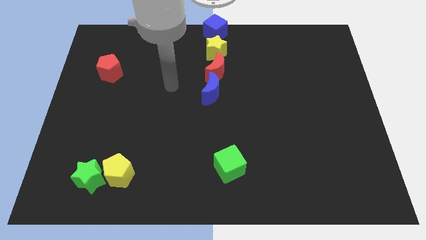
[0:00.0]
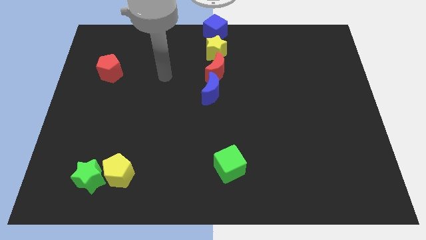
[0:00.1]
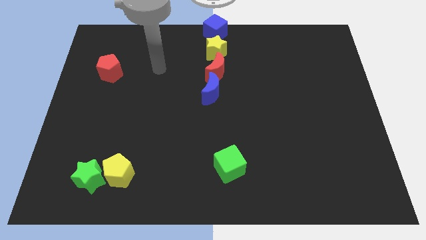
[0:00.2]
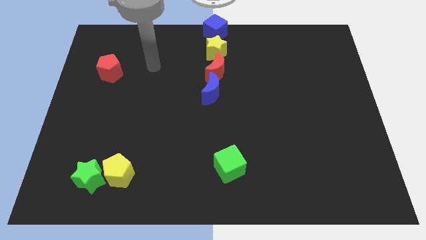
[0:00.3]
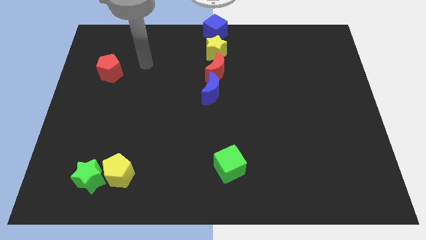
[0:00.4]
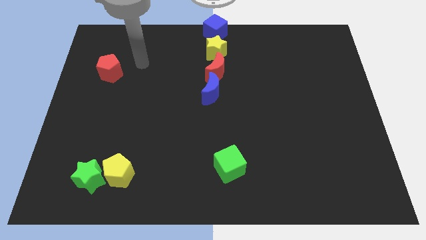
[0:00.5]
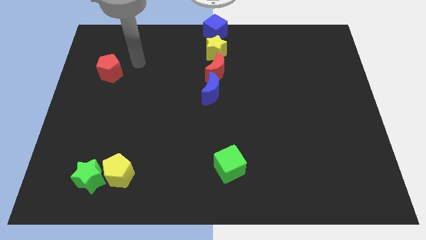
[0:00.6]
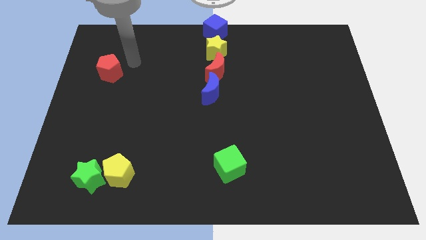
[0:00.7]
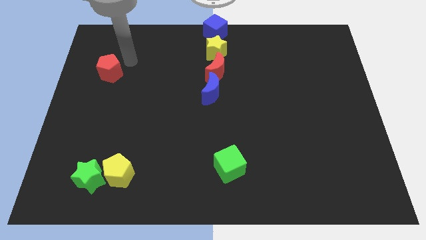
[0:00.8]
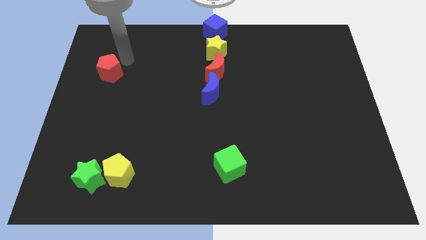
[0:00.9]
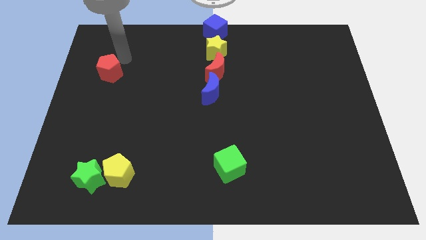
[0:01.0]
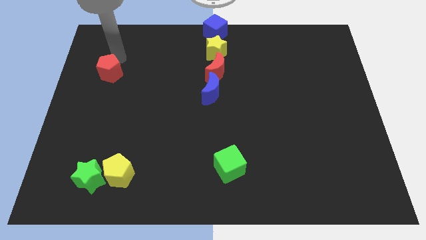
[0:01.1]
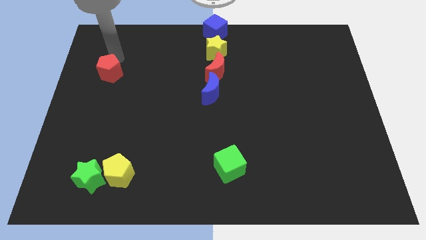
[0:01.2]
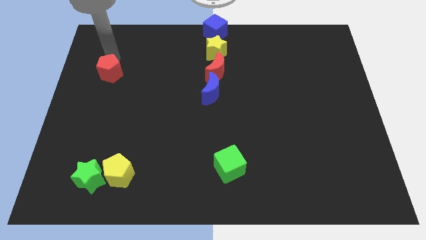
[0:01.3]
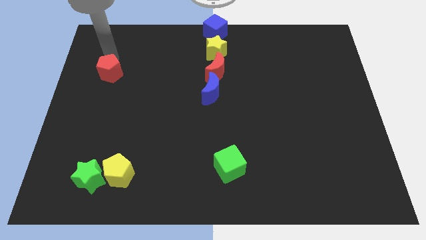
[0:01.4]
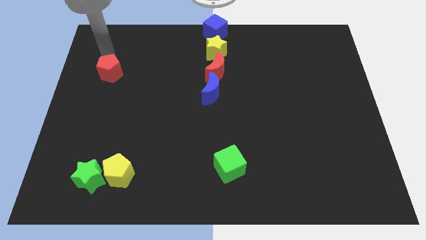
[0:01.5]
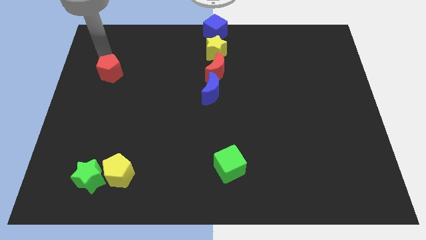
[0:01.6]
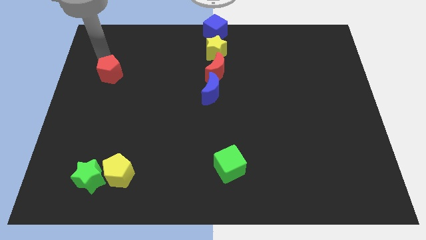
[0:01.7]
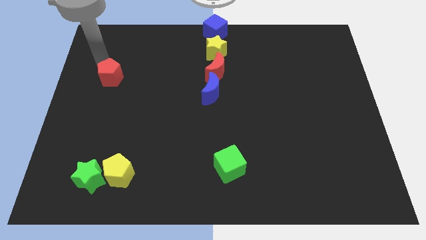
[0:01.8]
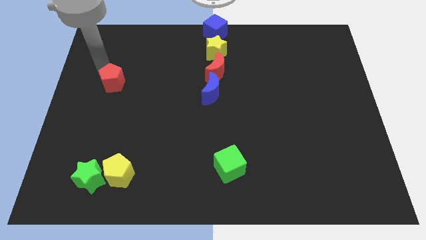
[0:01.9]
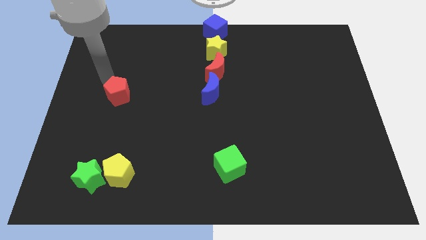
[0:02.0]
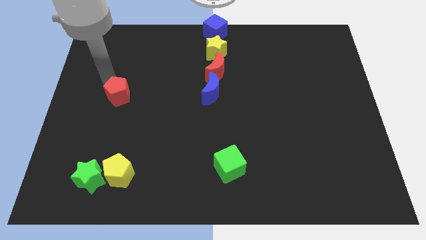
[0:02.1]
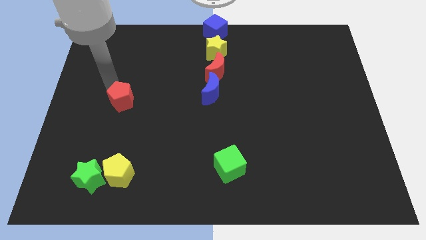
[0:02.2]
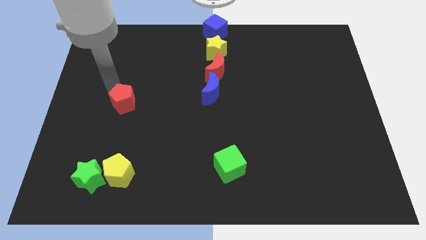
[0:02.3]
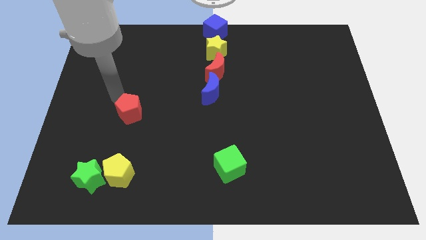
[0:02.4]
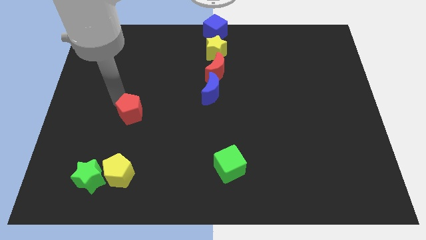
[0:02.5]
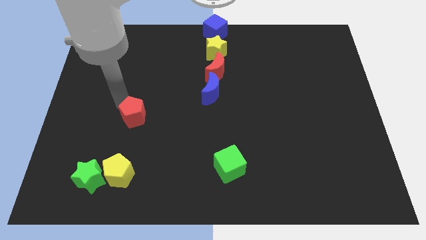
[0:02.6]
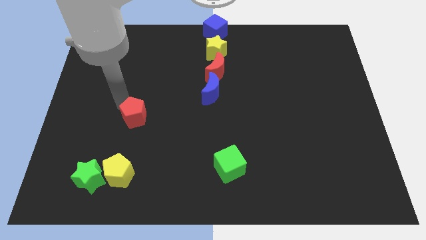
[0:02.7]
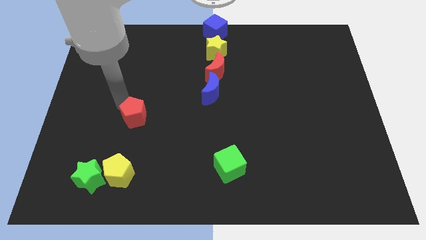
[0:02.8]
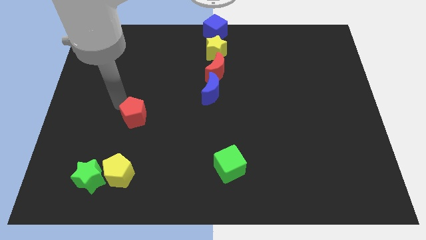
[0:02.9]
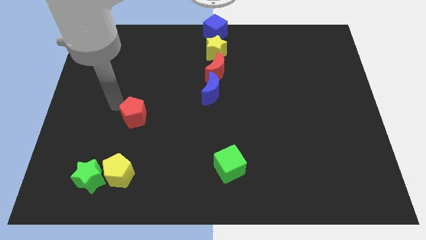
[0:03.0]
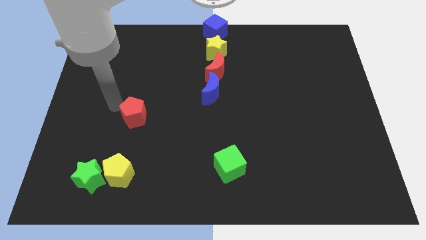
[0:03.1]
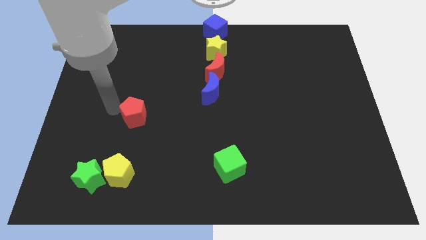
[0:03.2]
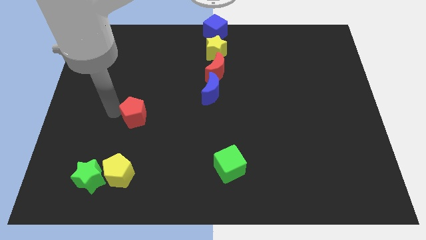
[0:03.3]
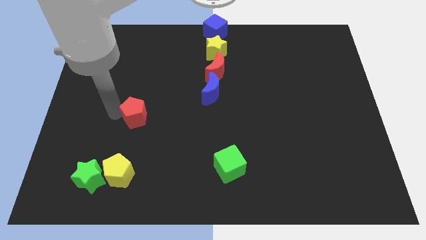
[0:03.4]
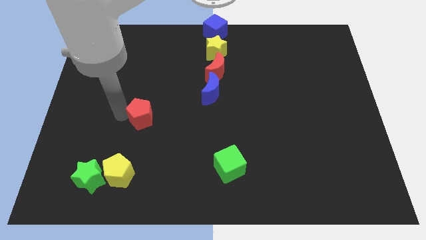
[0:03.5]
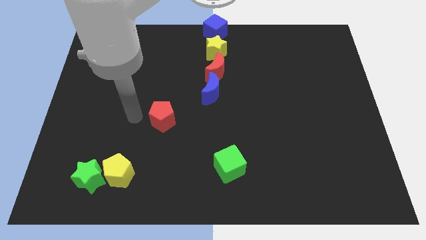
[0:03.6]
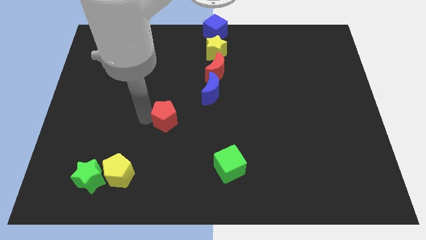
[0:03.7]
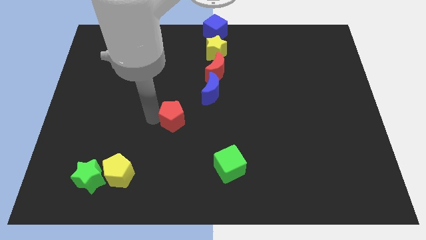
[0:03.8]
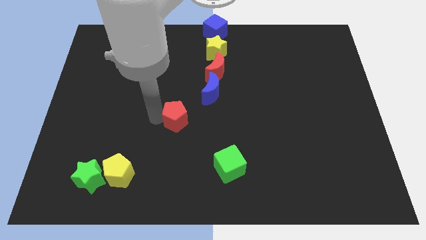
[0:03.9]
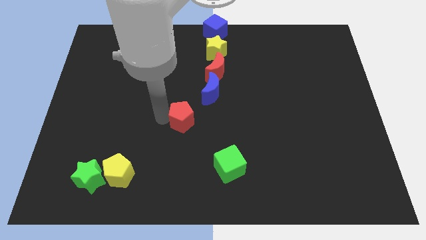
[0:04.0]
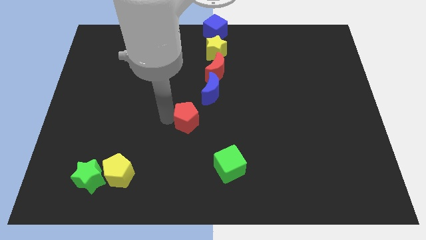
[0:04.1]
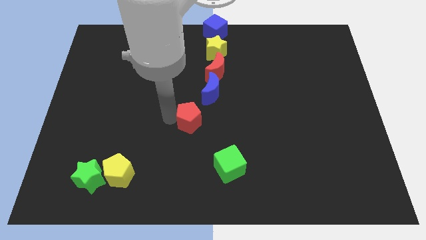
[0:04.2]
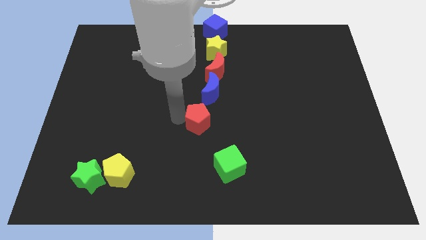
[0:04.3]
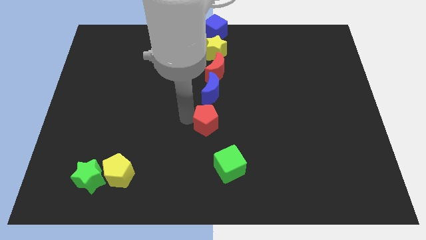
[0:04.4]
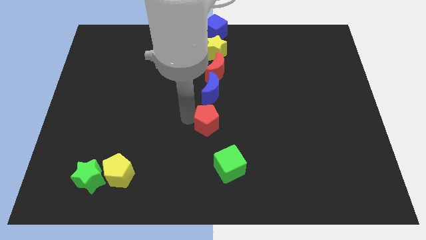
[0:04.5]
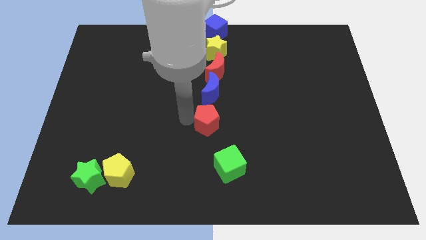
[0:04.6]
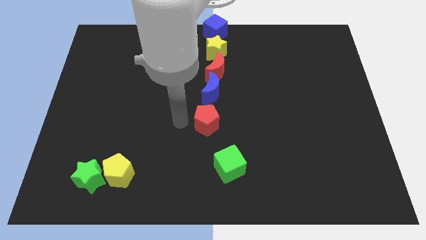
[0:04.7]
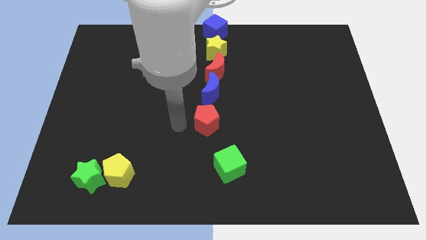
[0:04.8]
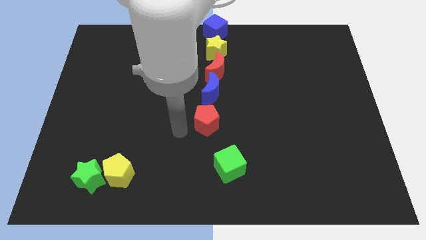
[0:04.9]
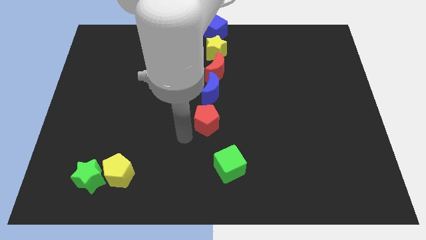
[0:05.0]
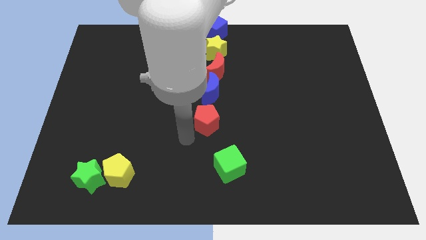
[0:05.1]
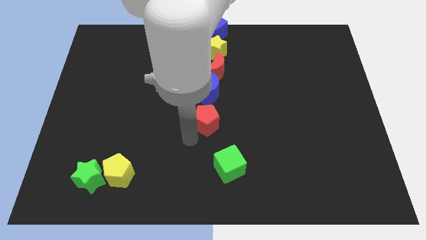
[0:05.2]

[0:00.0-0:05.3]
push the red pentagon to the bottom of the blue crescent

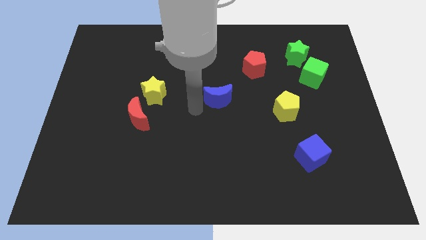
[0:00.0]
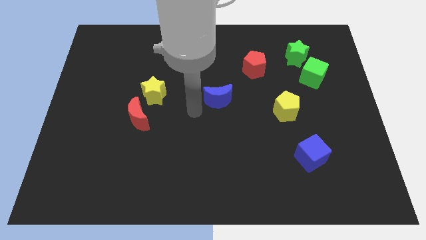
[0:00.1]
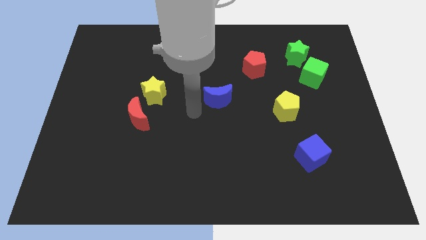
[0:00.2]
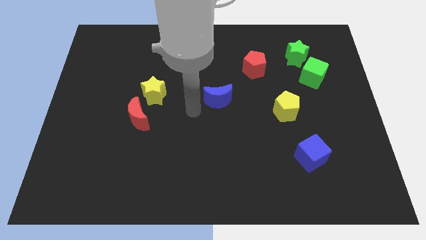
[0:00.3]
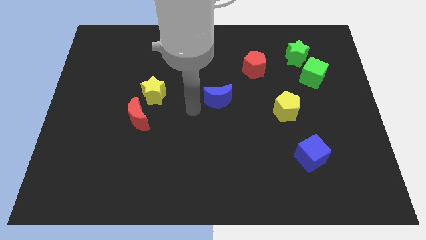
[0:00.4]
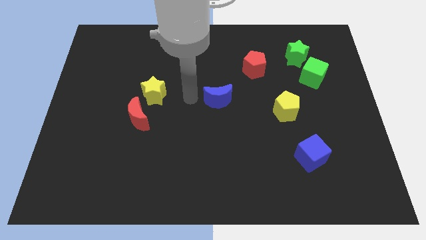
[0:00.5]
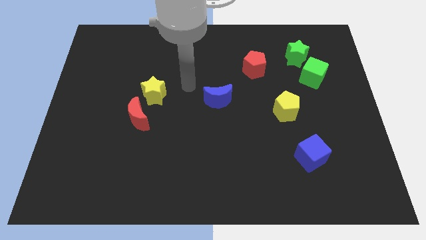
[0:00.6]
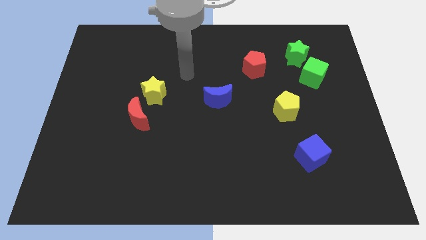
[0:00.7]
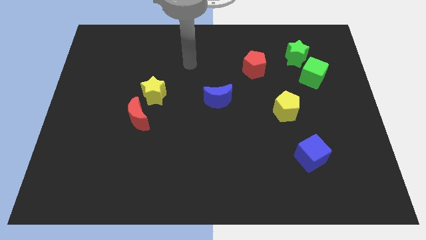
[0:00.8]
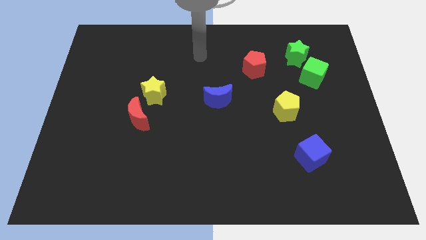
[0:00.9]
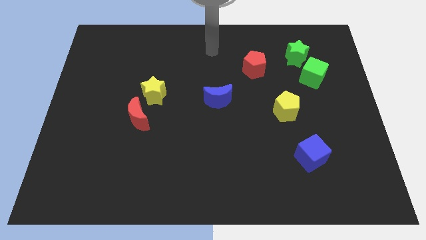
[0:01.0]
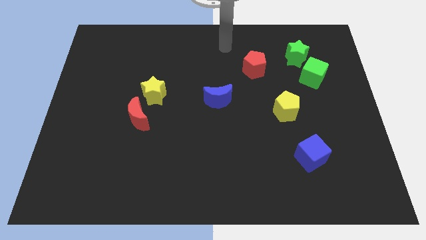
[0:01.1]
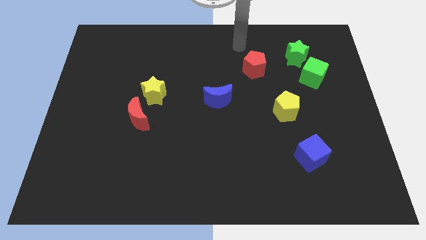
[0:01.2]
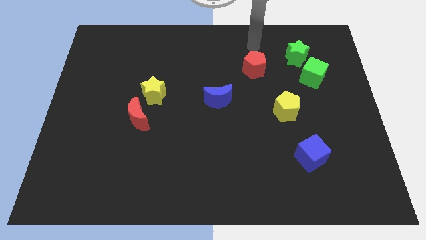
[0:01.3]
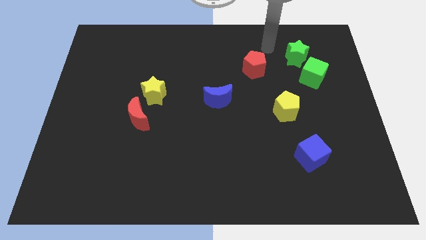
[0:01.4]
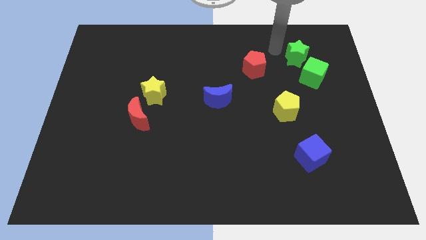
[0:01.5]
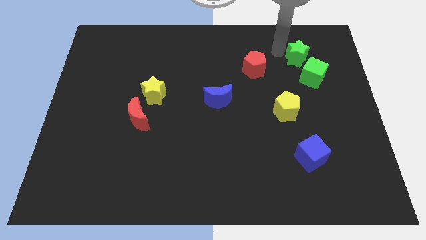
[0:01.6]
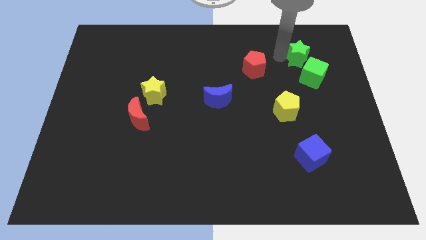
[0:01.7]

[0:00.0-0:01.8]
place your hand at the top left of the green star

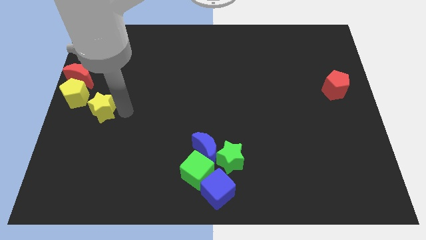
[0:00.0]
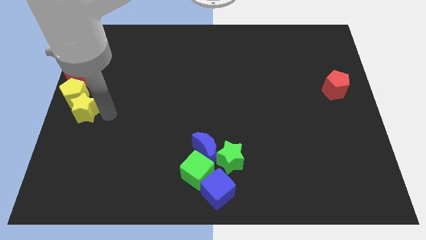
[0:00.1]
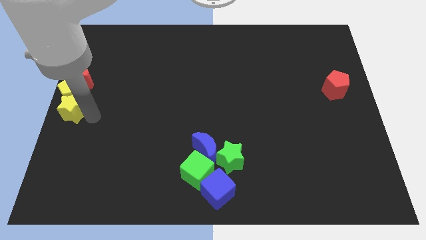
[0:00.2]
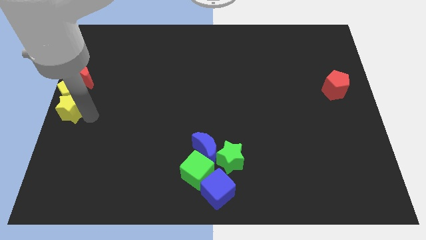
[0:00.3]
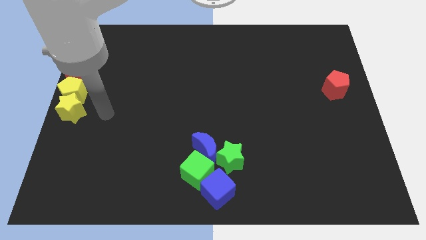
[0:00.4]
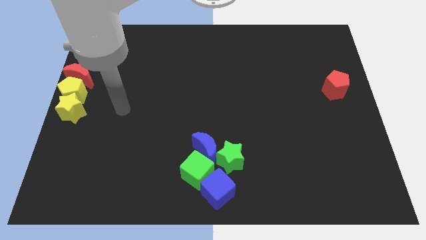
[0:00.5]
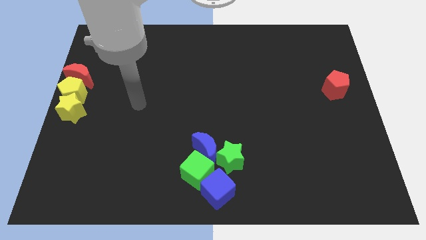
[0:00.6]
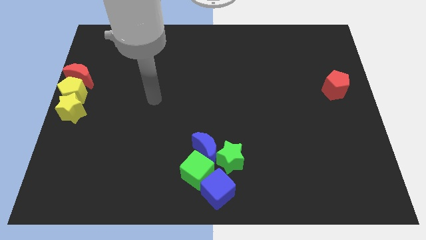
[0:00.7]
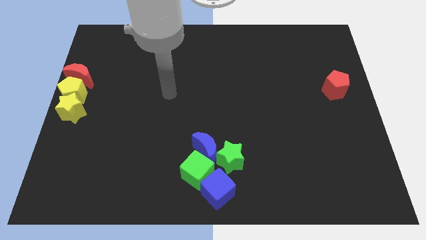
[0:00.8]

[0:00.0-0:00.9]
push the yellow star to the bottom of the yellow pentagon

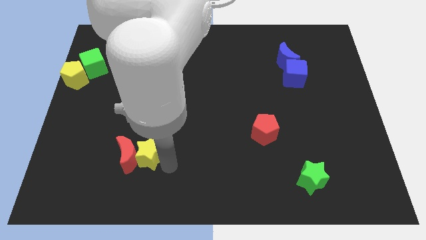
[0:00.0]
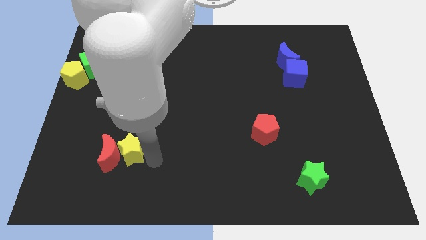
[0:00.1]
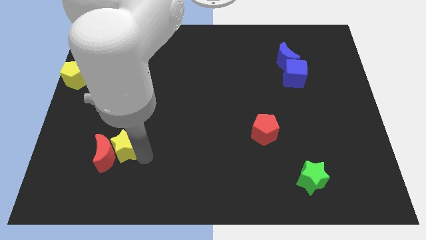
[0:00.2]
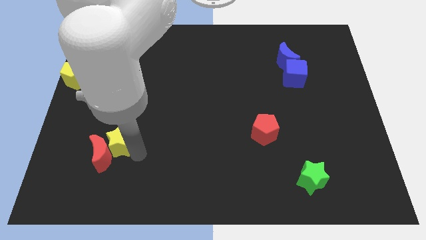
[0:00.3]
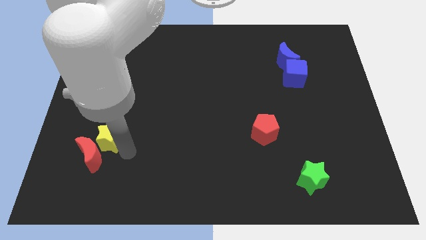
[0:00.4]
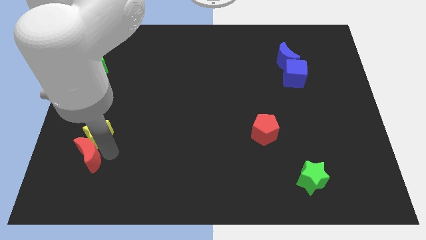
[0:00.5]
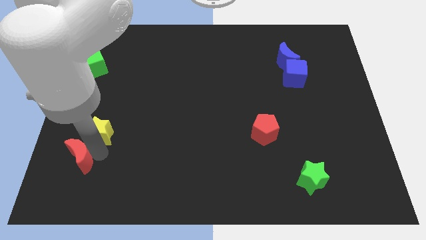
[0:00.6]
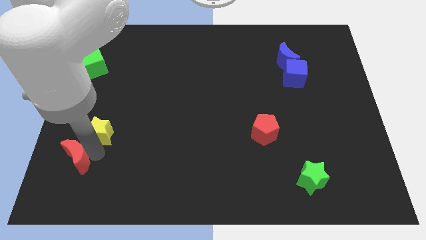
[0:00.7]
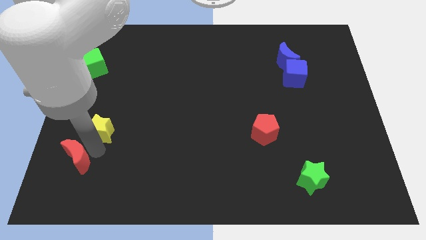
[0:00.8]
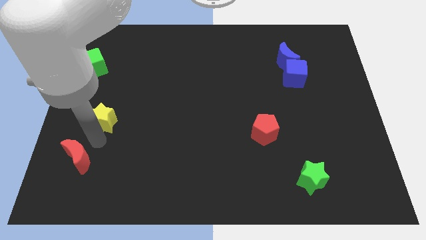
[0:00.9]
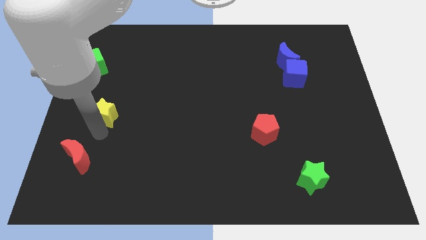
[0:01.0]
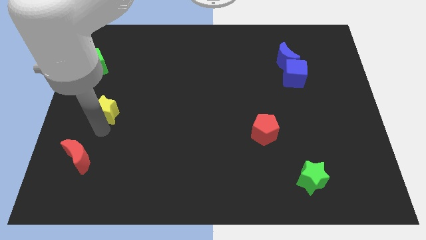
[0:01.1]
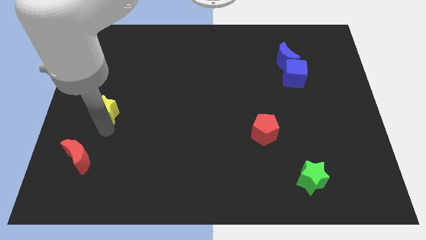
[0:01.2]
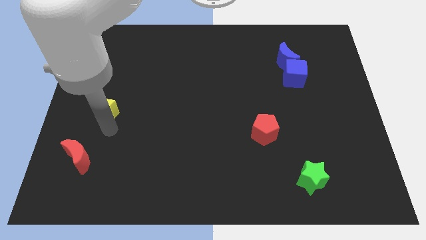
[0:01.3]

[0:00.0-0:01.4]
serparate yellow star and the red moon
